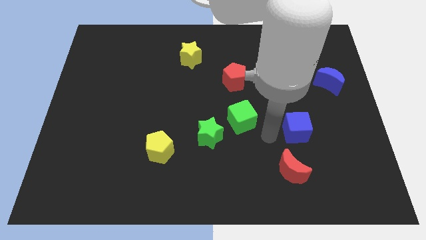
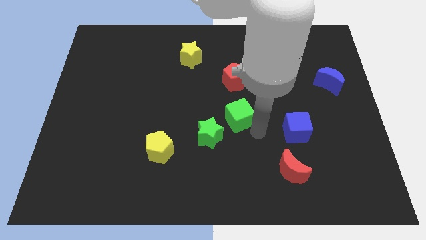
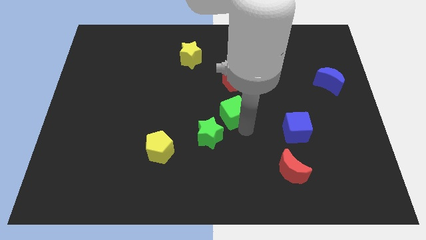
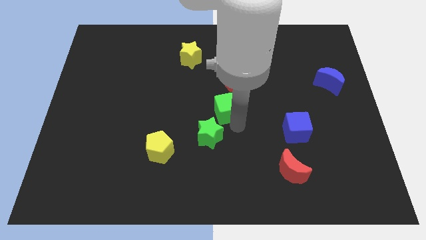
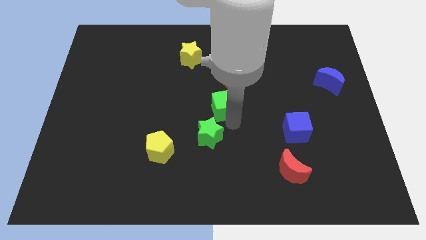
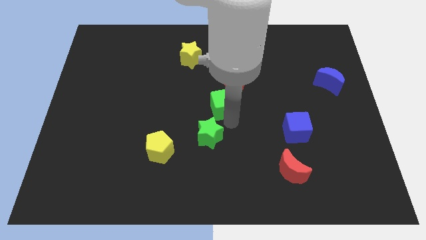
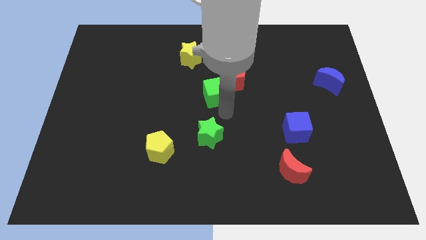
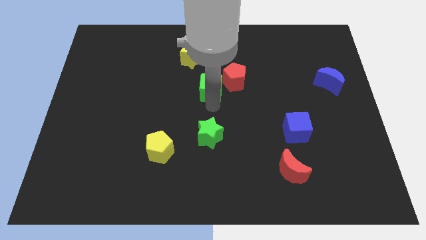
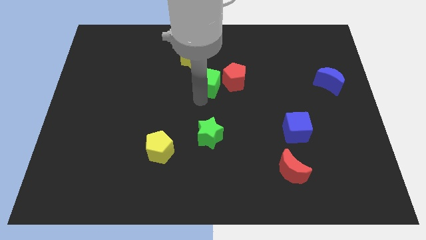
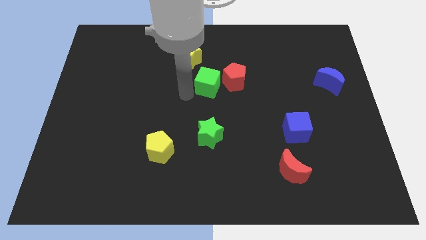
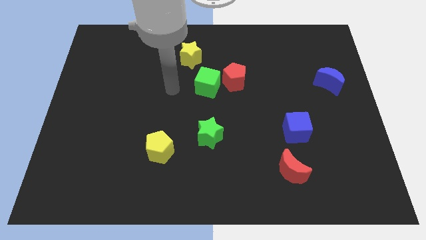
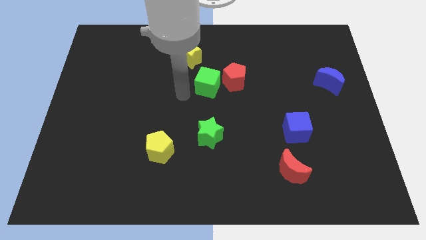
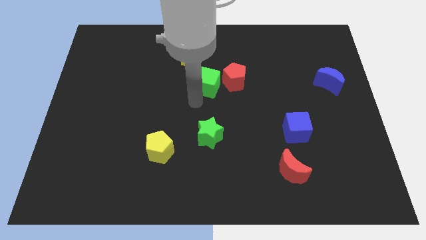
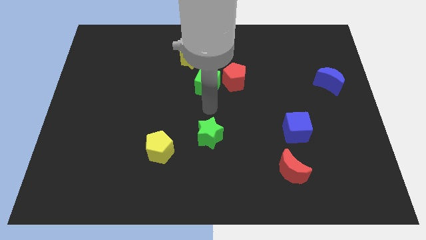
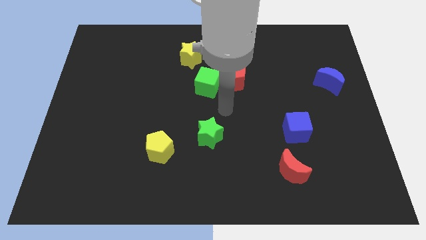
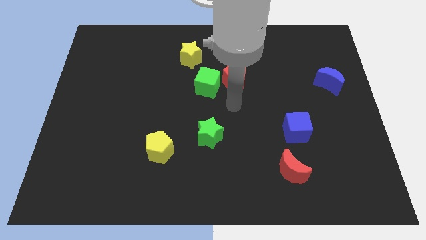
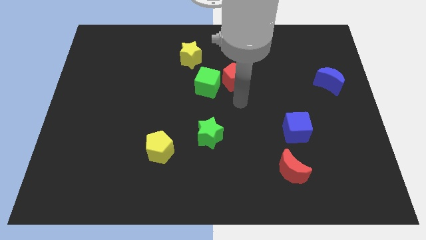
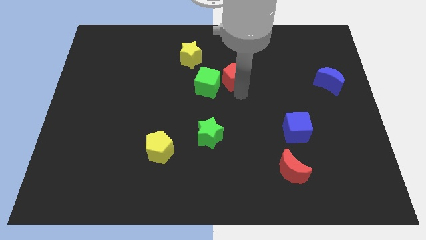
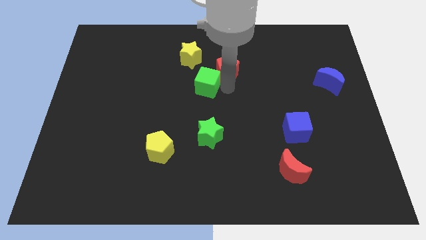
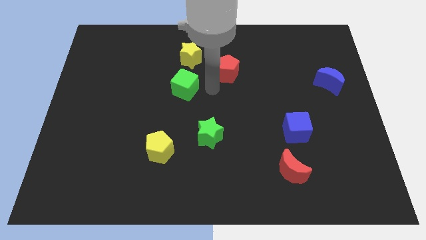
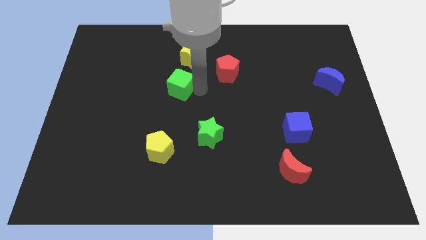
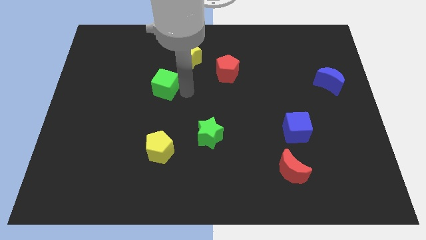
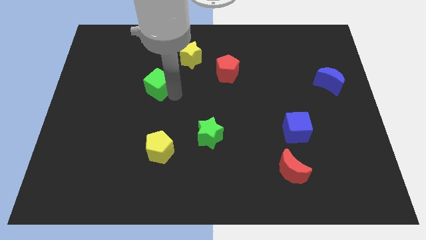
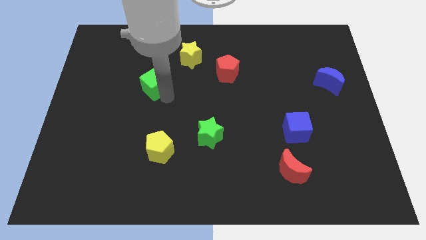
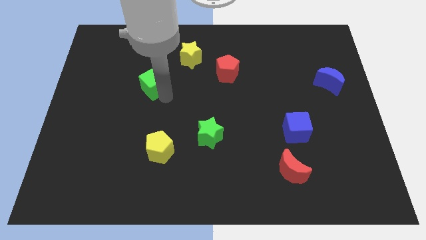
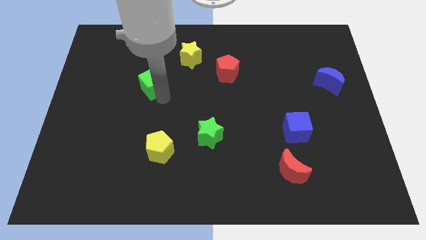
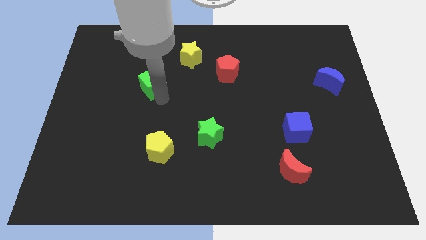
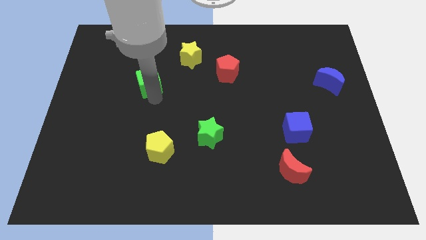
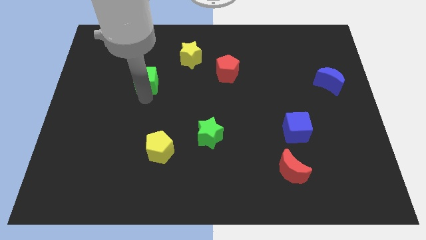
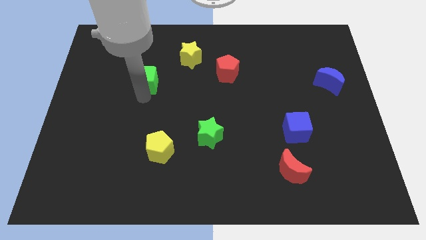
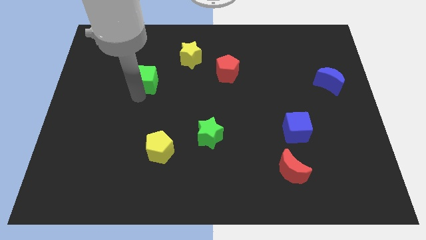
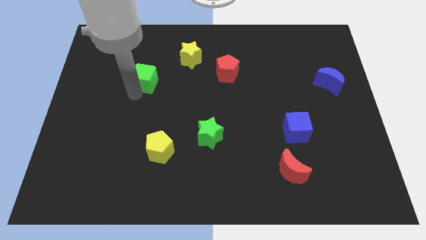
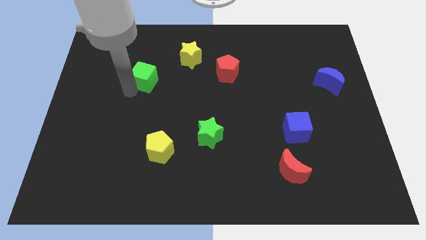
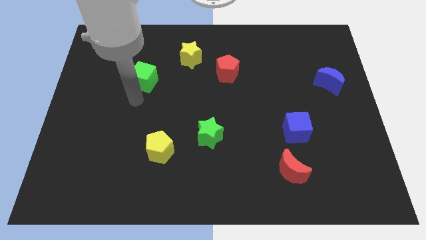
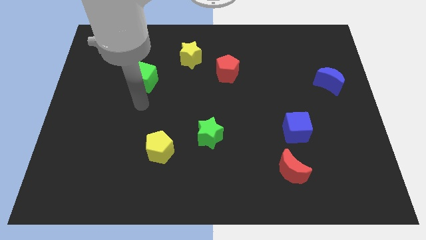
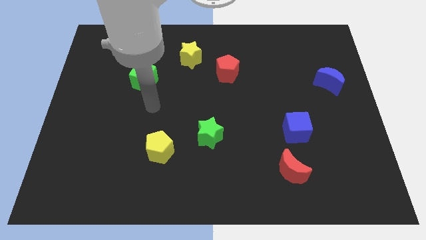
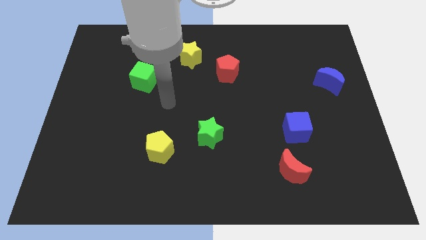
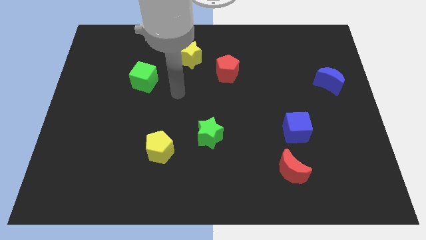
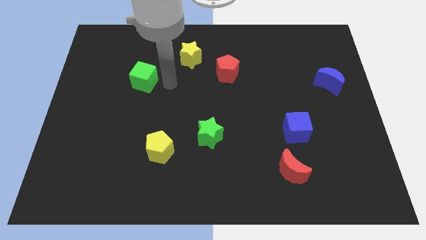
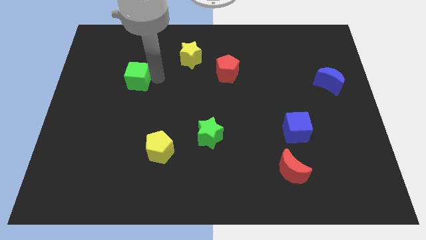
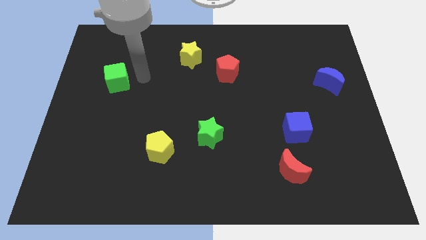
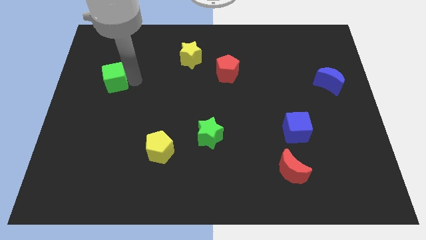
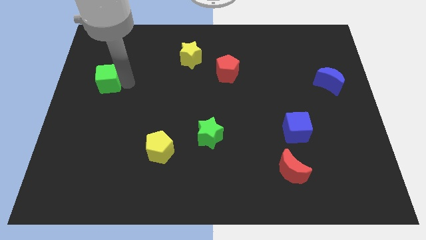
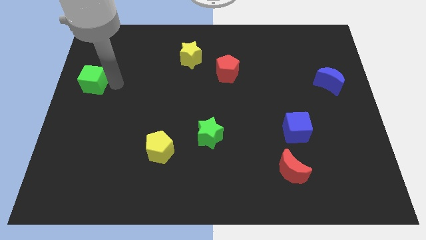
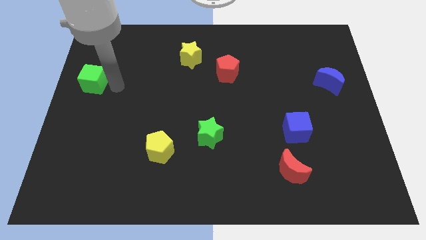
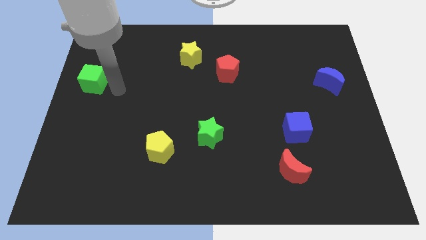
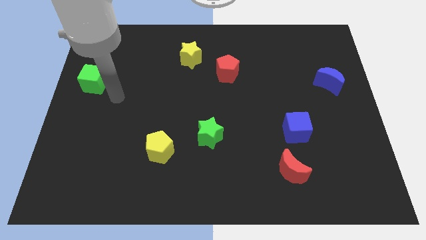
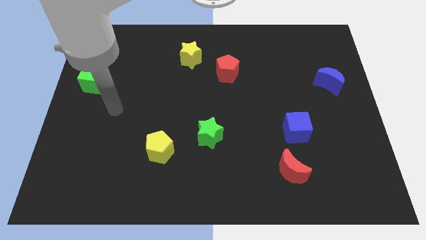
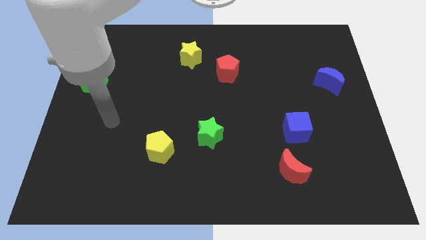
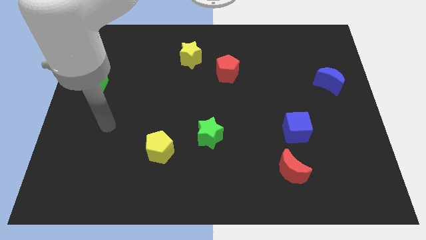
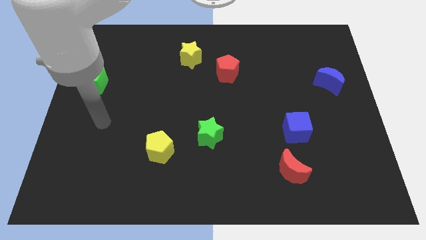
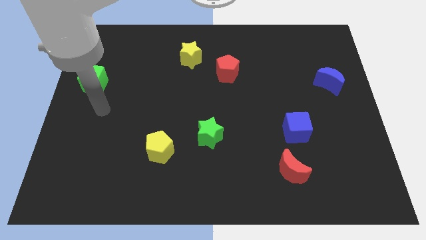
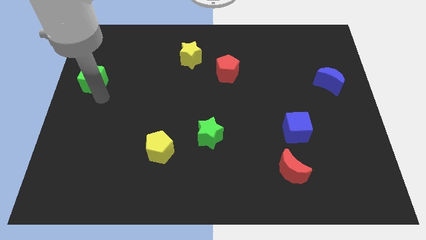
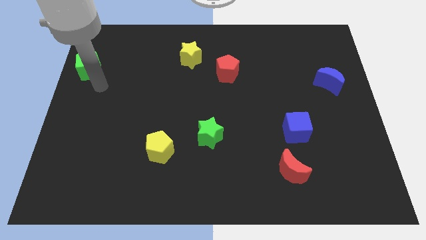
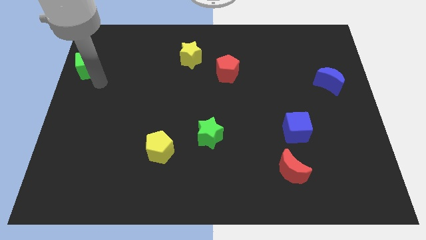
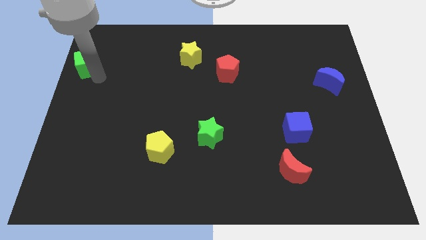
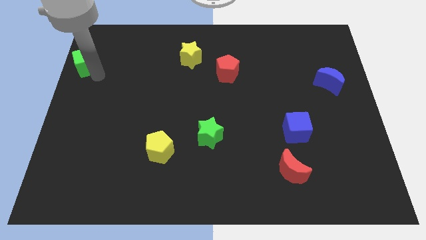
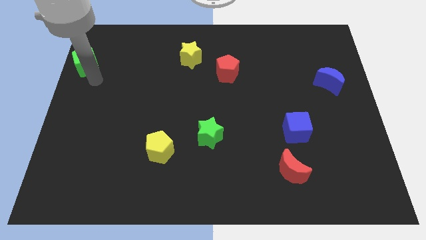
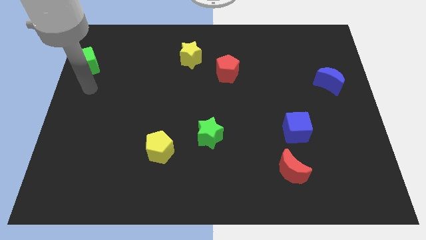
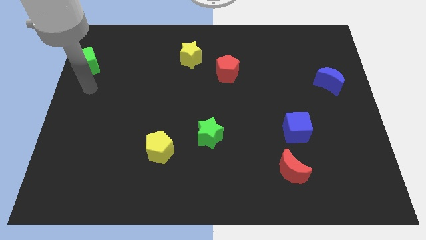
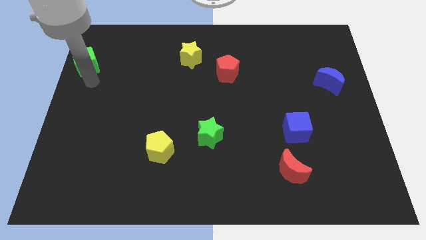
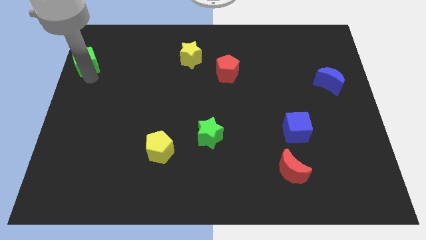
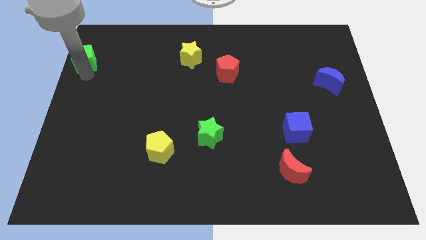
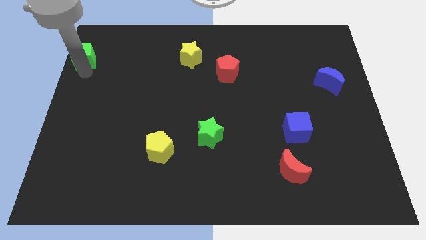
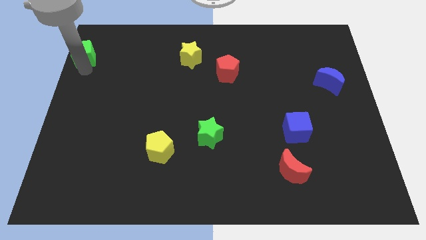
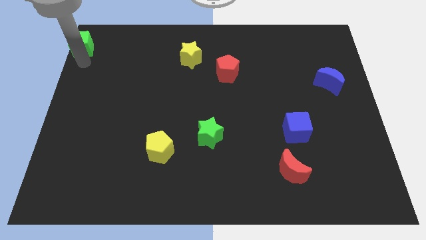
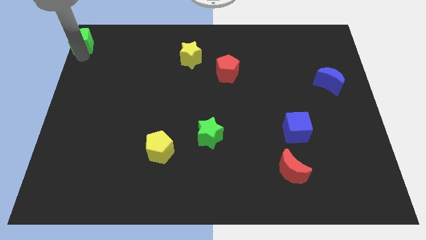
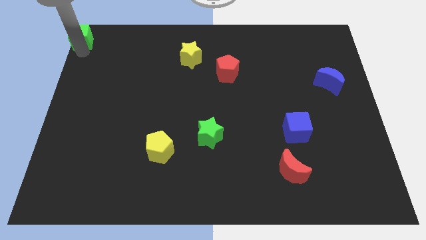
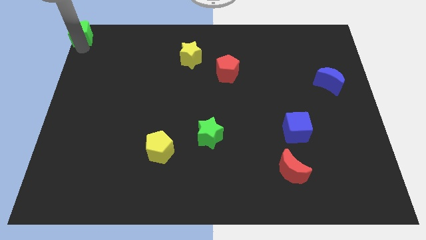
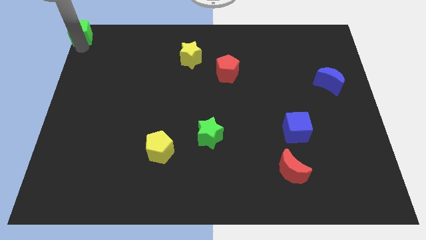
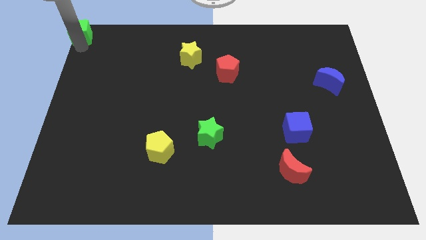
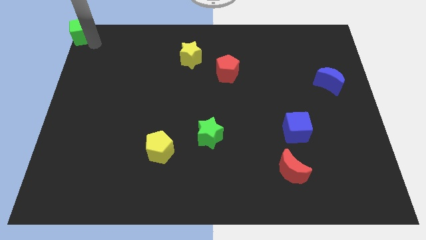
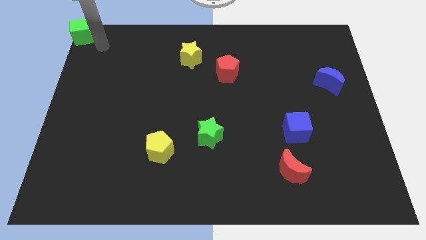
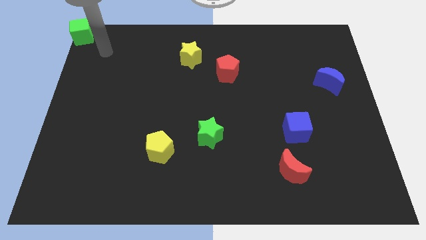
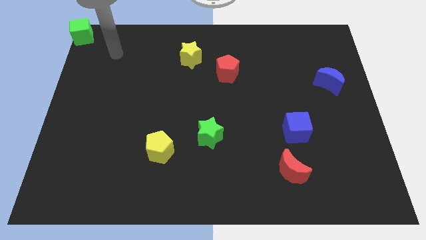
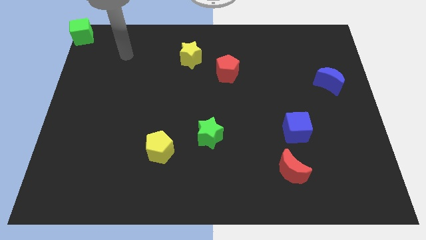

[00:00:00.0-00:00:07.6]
push the green cube to the top left corner of the board

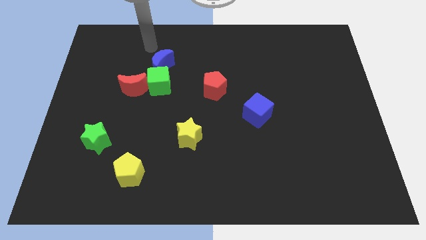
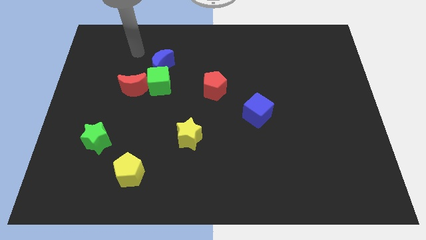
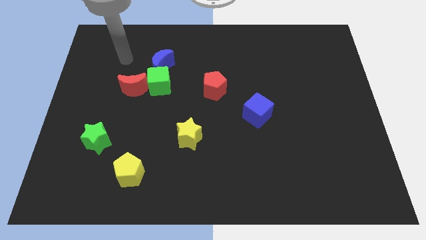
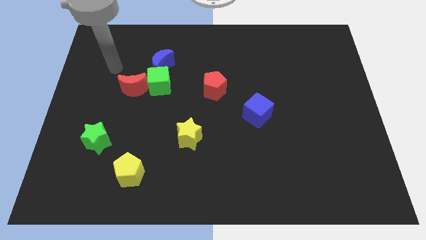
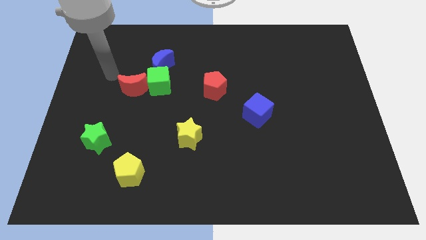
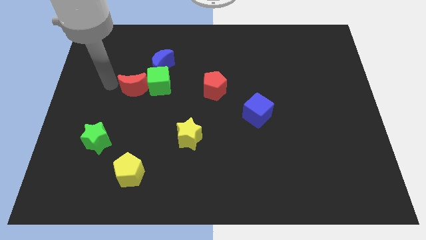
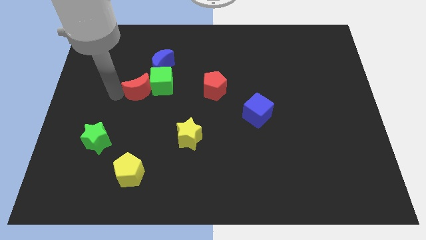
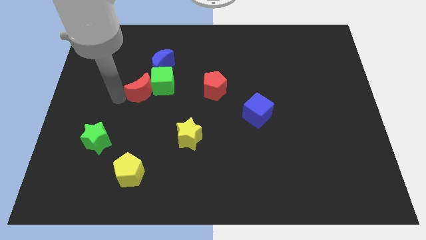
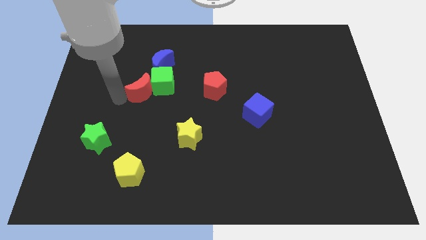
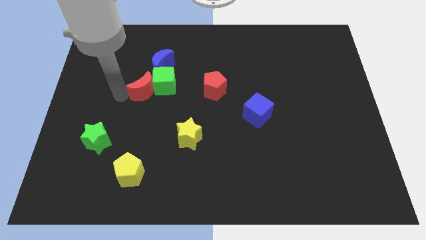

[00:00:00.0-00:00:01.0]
push the red moon into the green cube

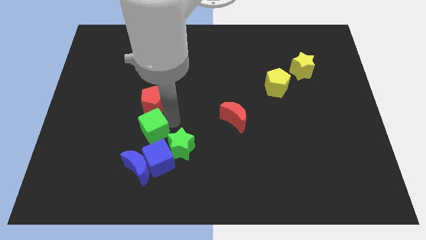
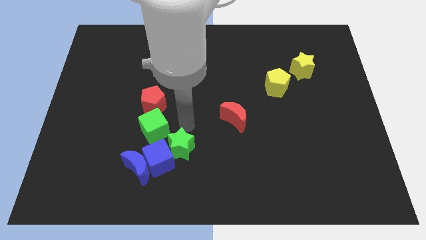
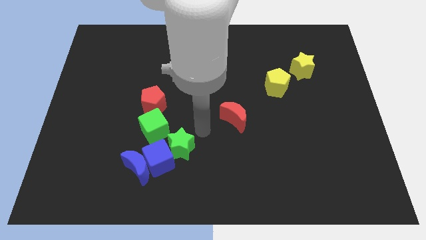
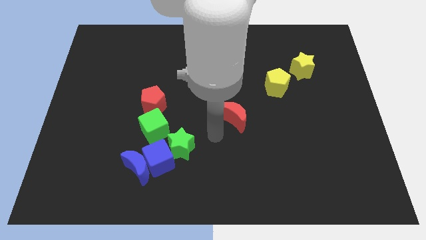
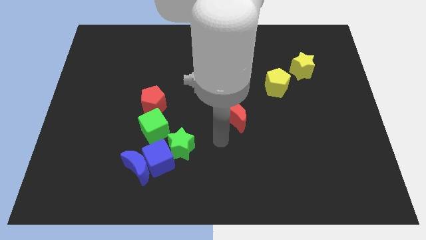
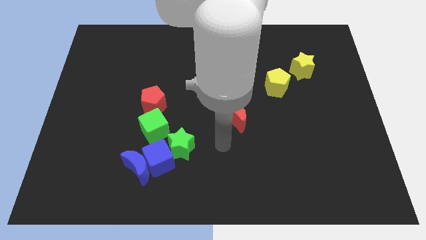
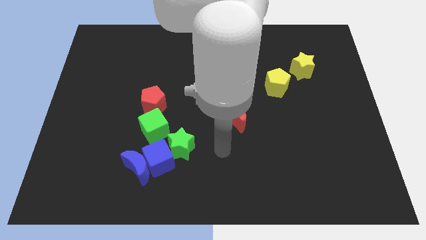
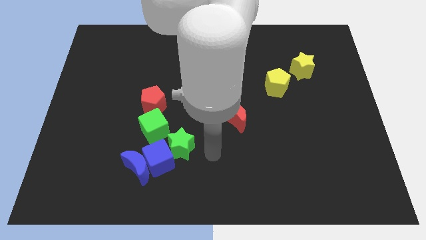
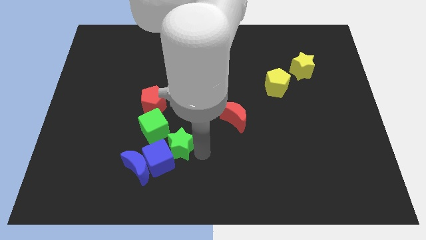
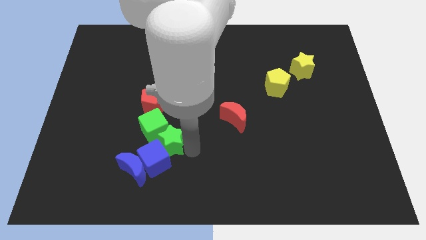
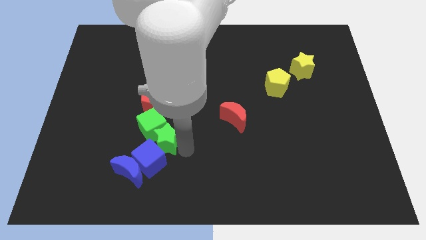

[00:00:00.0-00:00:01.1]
move the green star into the green cube
